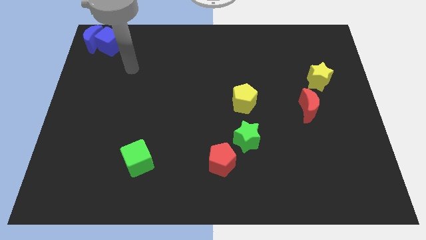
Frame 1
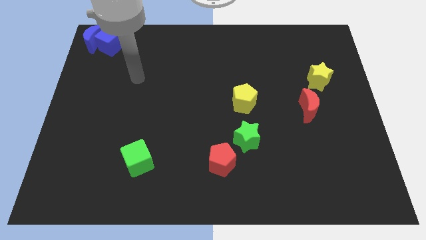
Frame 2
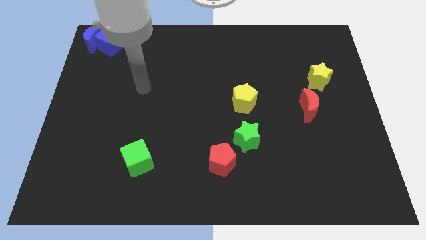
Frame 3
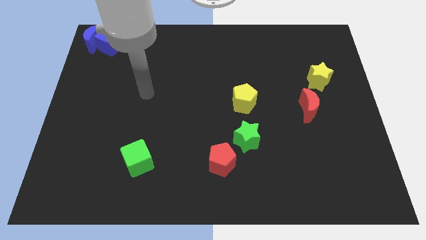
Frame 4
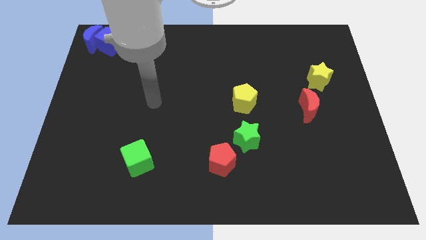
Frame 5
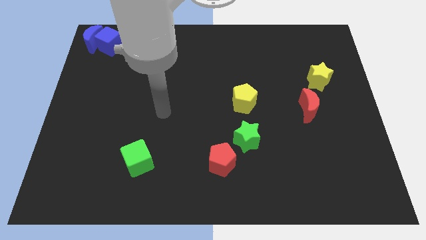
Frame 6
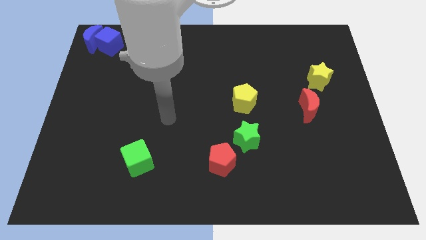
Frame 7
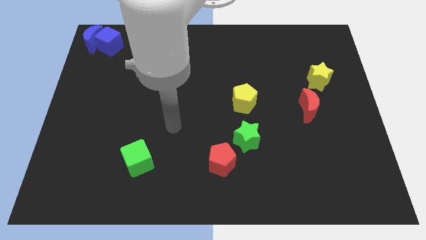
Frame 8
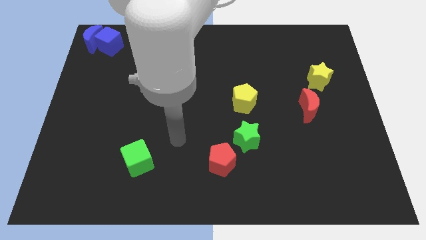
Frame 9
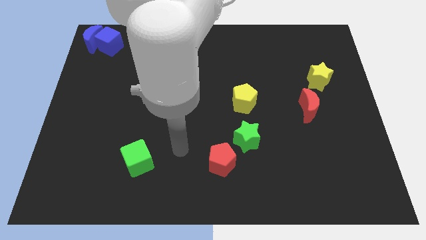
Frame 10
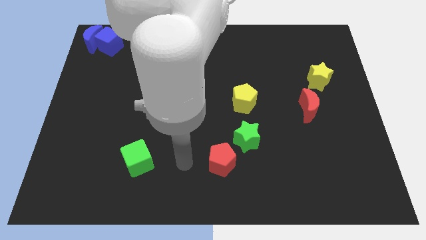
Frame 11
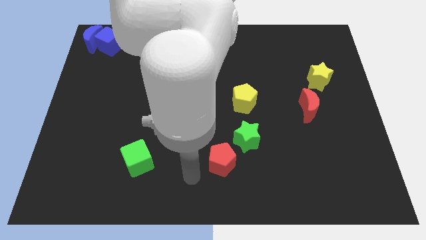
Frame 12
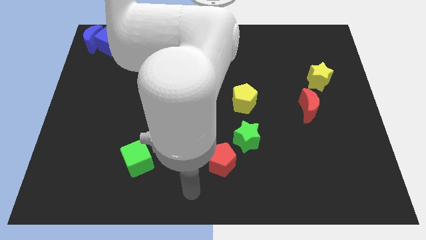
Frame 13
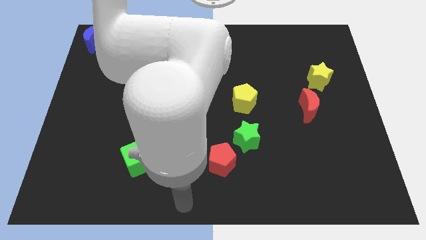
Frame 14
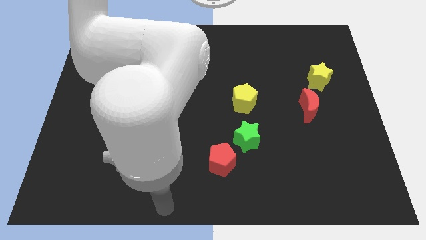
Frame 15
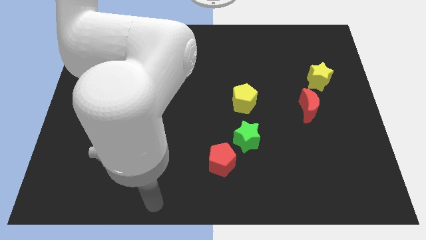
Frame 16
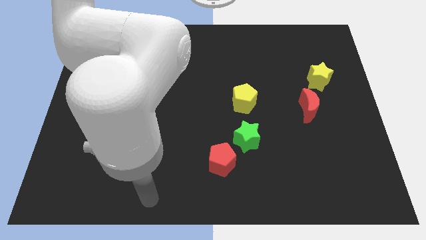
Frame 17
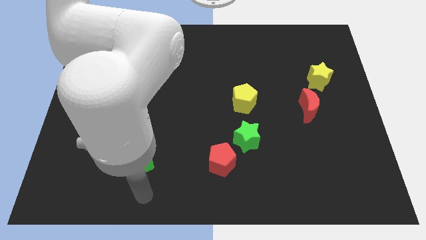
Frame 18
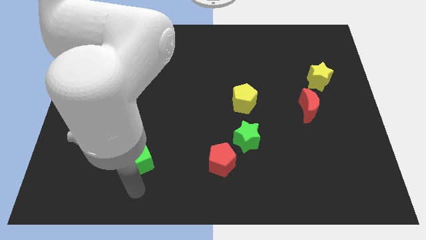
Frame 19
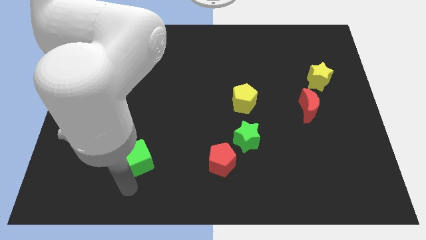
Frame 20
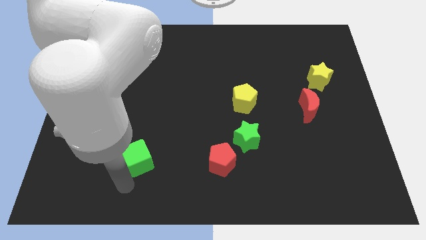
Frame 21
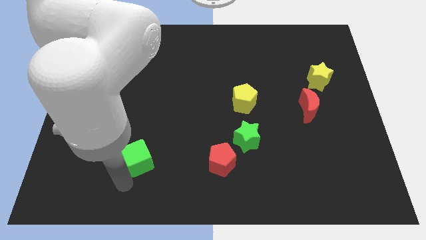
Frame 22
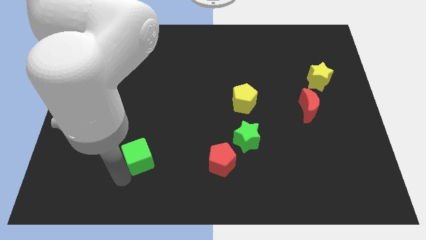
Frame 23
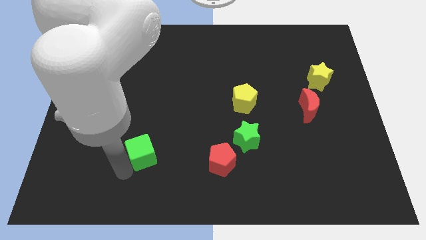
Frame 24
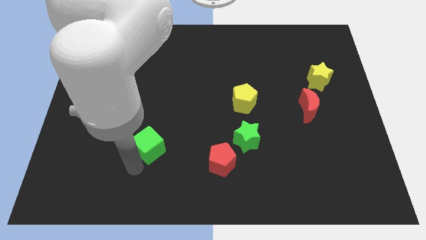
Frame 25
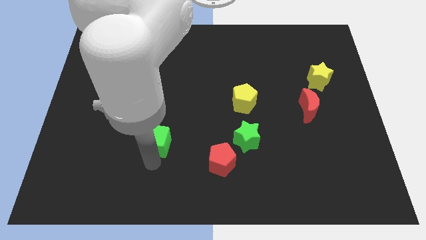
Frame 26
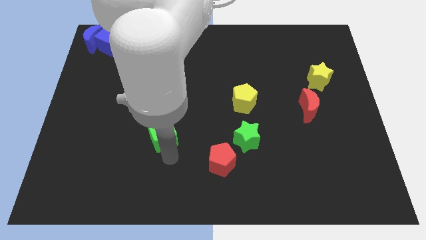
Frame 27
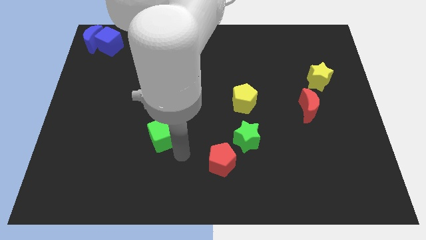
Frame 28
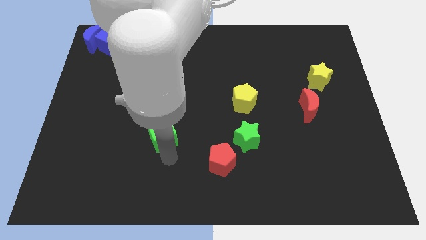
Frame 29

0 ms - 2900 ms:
move green cube to the center

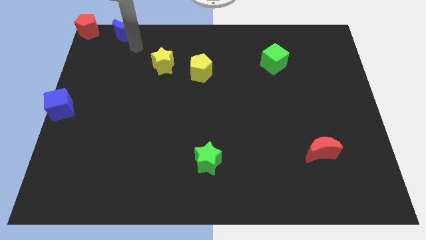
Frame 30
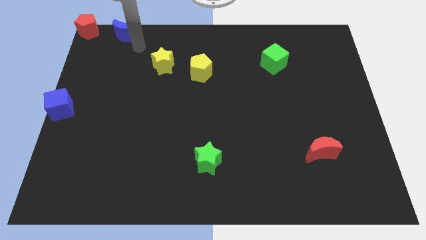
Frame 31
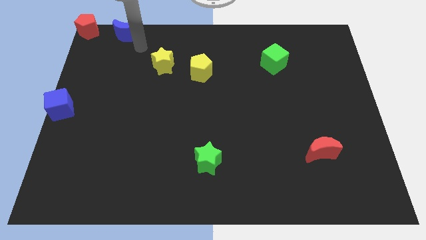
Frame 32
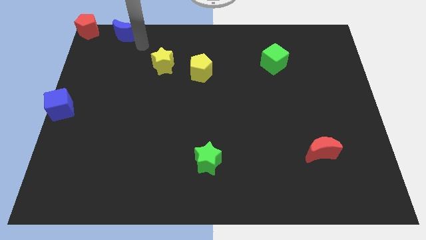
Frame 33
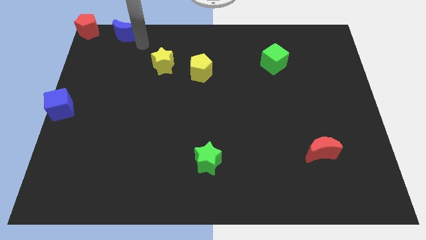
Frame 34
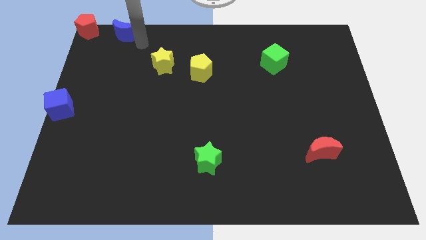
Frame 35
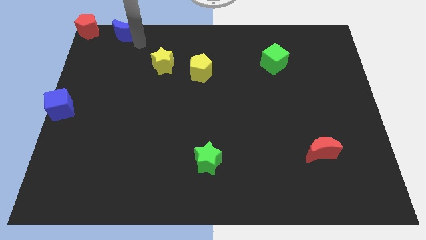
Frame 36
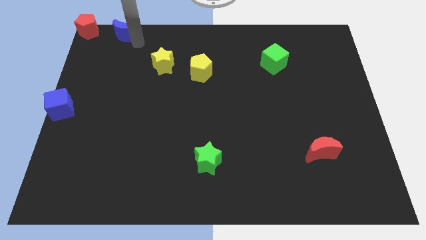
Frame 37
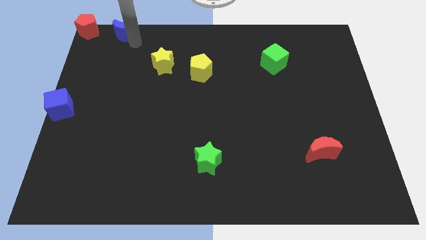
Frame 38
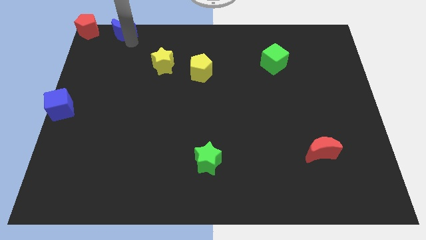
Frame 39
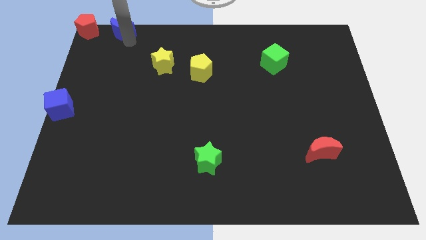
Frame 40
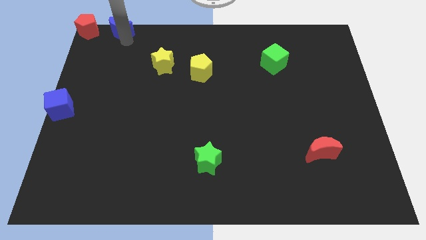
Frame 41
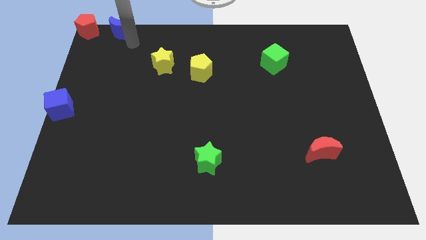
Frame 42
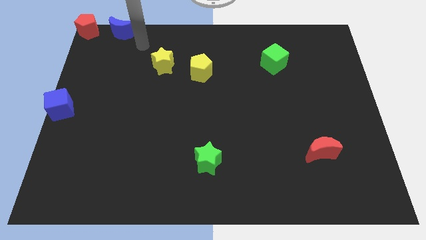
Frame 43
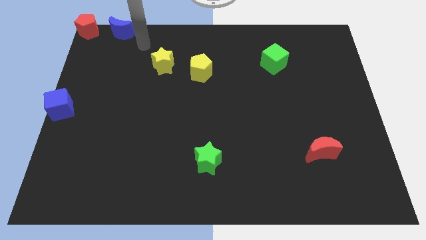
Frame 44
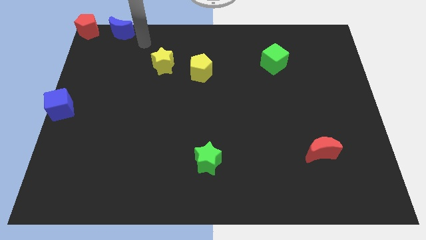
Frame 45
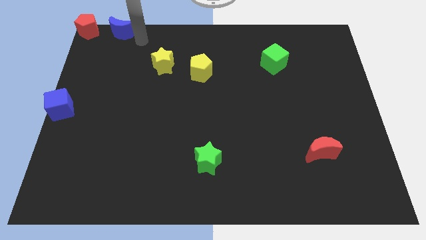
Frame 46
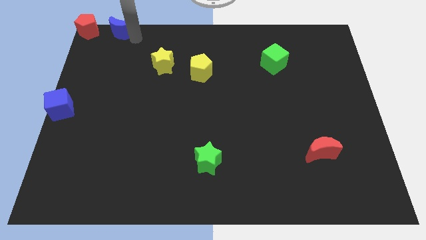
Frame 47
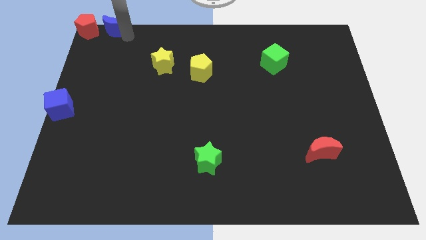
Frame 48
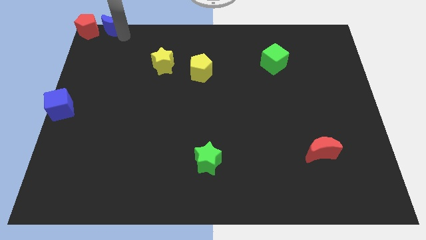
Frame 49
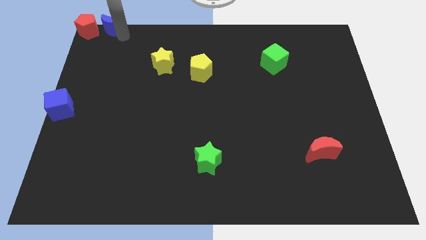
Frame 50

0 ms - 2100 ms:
place the blue crescent towards the right side of the red pentagon

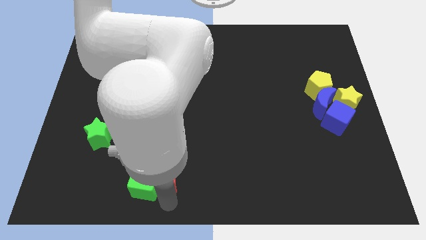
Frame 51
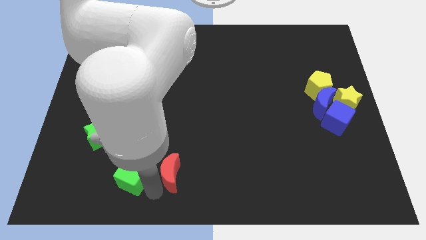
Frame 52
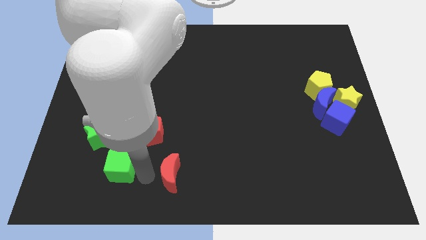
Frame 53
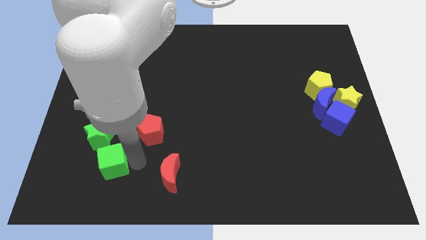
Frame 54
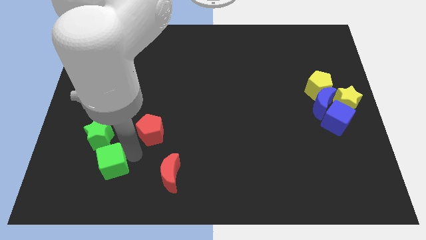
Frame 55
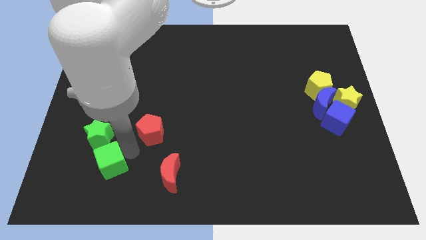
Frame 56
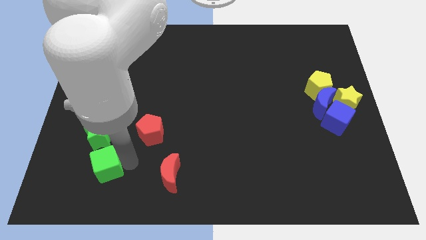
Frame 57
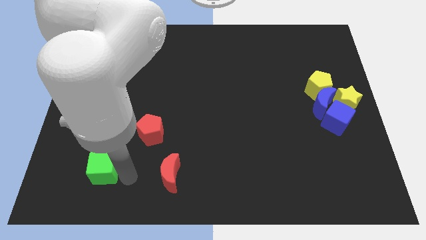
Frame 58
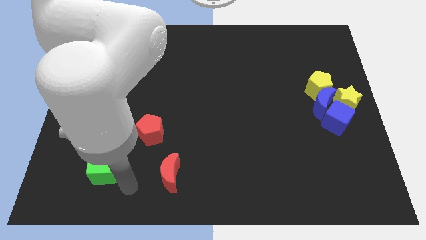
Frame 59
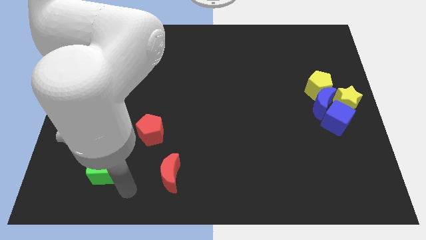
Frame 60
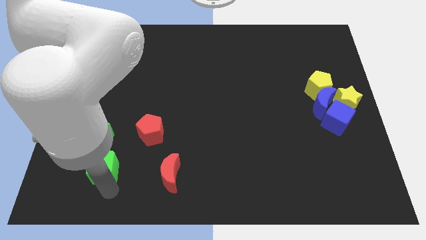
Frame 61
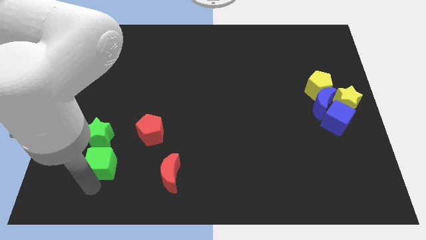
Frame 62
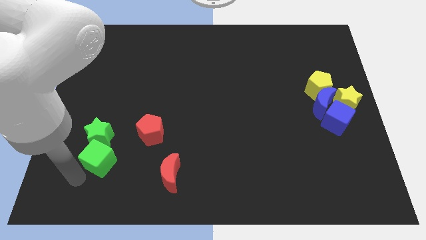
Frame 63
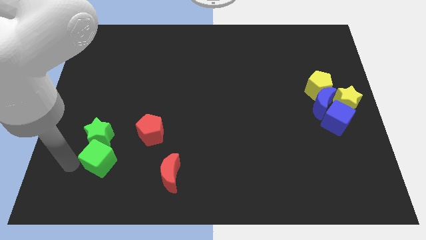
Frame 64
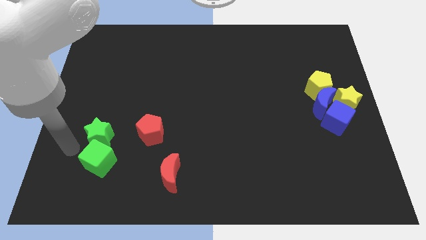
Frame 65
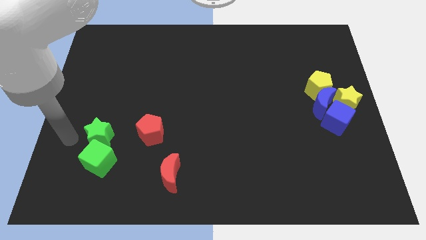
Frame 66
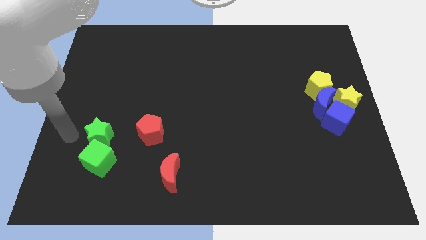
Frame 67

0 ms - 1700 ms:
move the green cube to the bottom of the green star

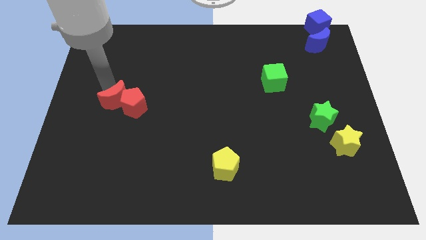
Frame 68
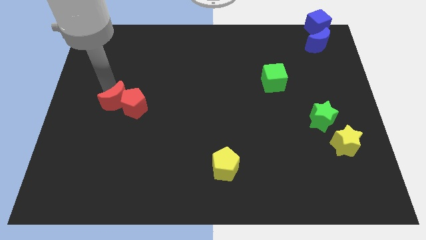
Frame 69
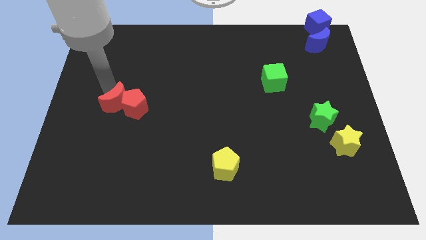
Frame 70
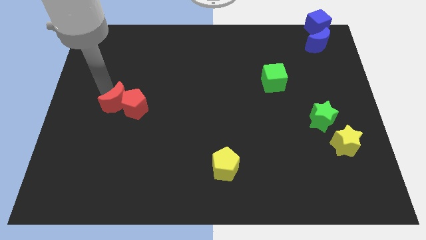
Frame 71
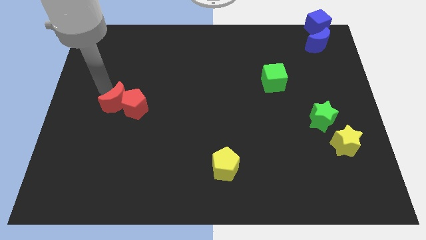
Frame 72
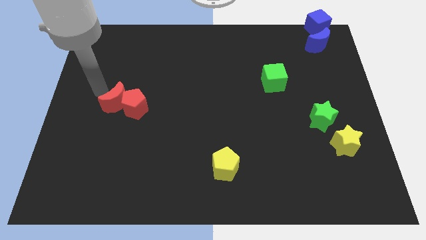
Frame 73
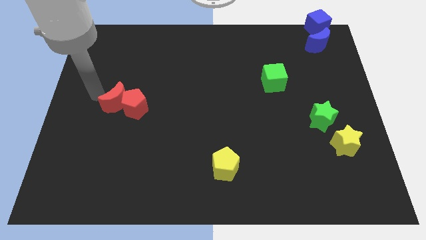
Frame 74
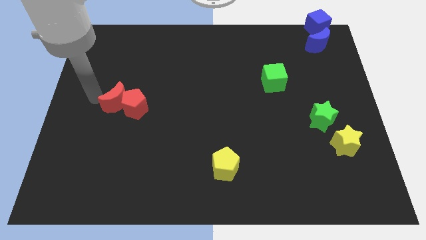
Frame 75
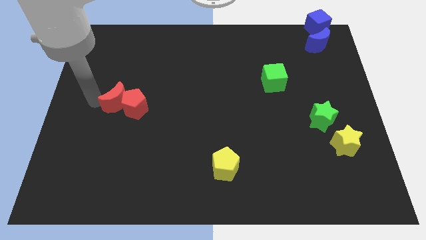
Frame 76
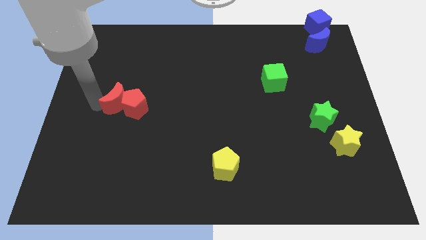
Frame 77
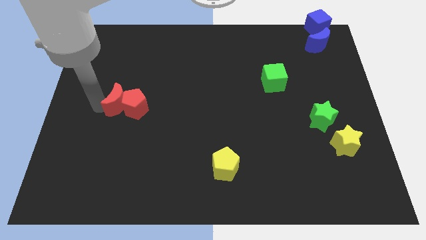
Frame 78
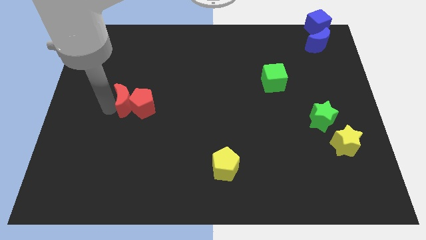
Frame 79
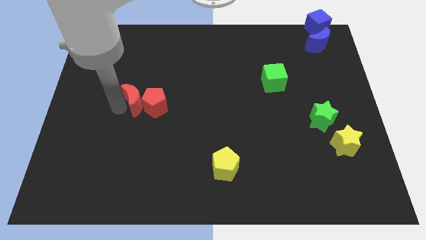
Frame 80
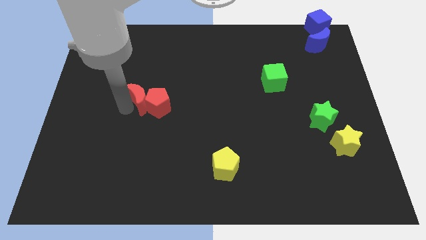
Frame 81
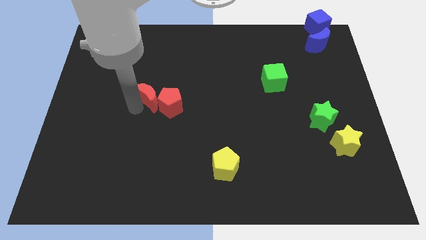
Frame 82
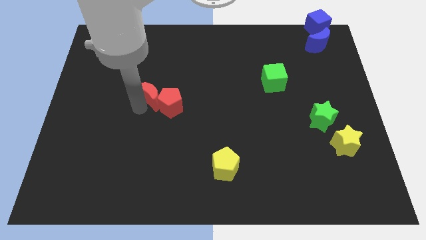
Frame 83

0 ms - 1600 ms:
push the red crescent to the left of the red pentagon

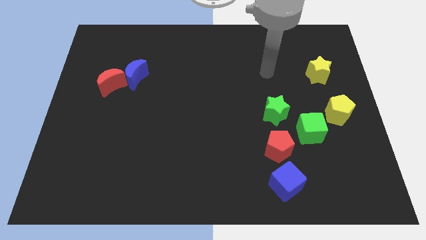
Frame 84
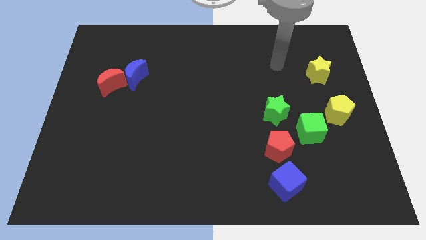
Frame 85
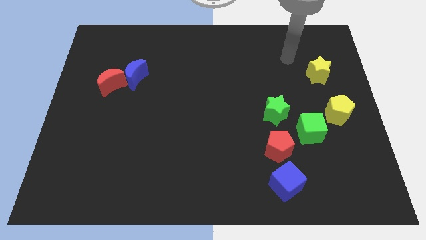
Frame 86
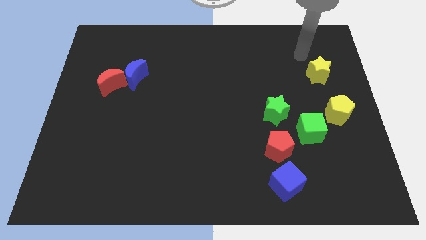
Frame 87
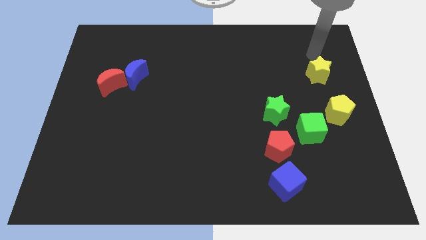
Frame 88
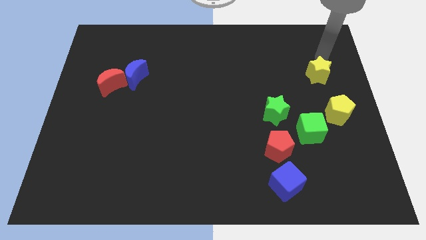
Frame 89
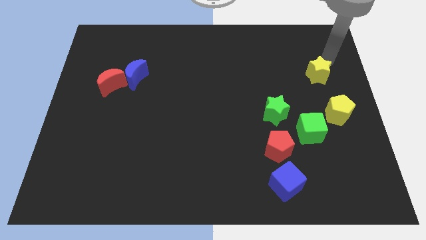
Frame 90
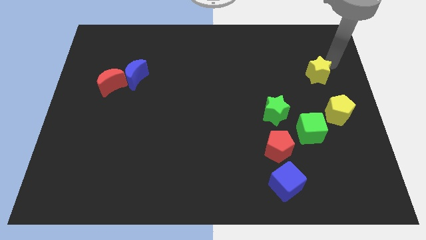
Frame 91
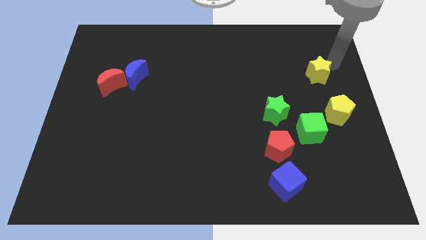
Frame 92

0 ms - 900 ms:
place your arm towards the right side of the yellow star
